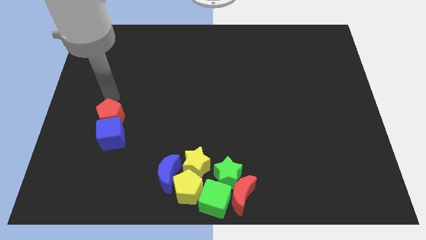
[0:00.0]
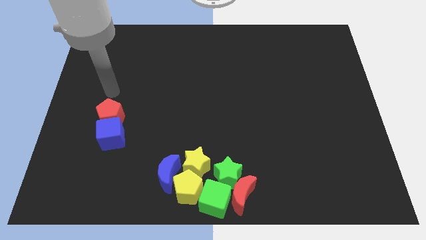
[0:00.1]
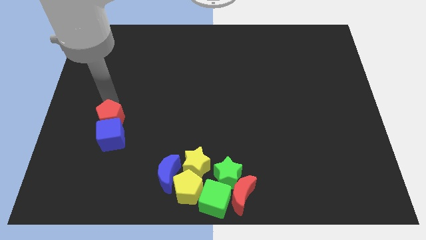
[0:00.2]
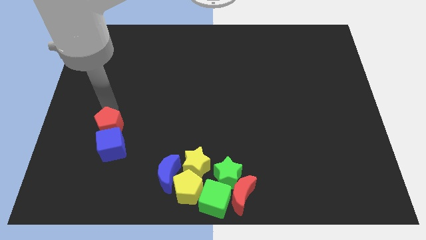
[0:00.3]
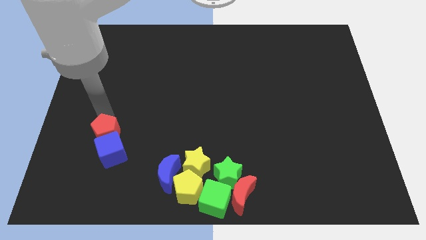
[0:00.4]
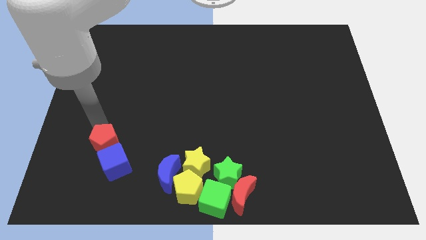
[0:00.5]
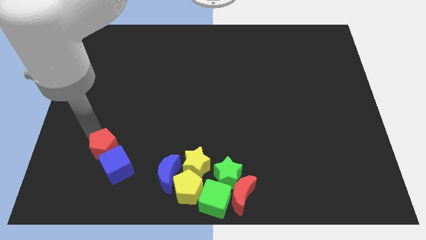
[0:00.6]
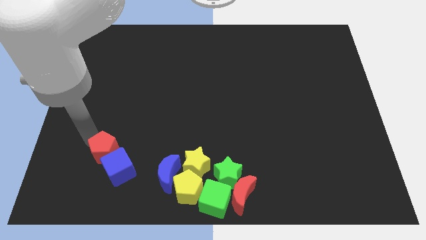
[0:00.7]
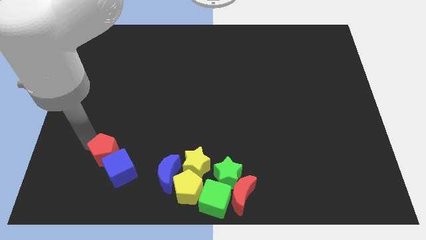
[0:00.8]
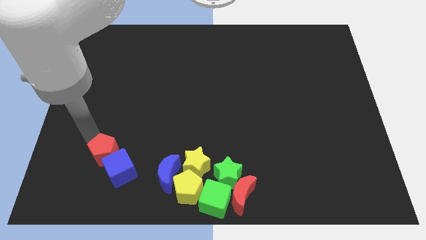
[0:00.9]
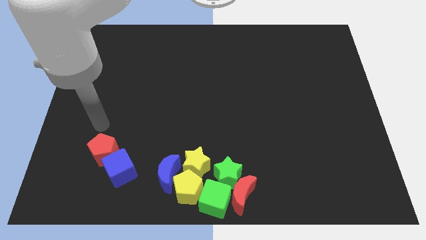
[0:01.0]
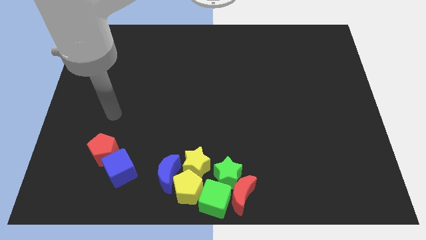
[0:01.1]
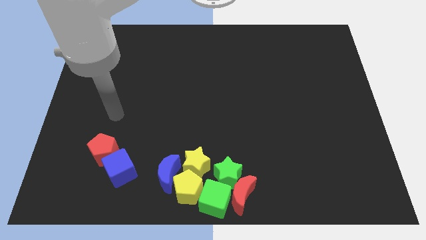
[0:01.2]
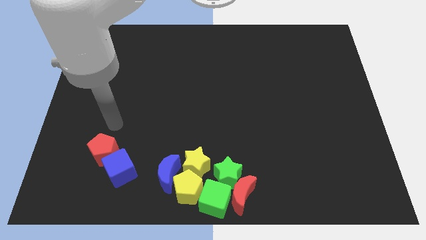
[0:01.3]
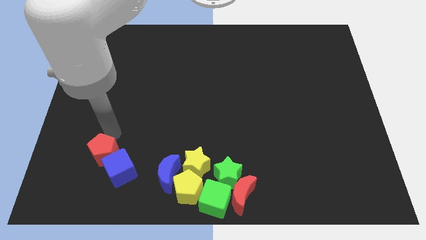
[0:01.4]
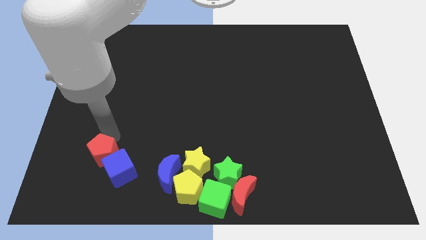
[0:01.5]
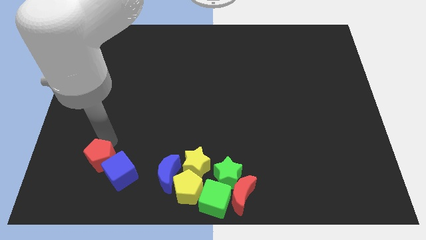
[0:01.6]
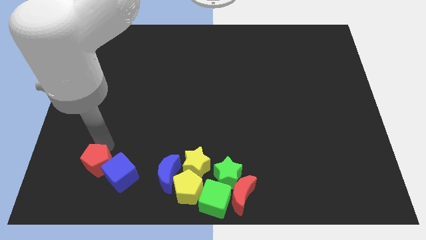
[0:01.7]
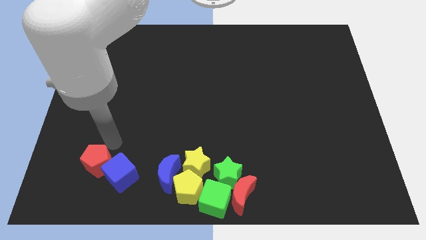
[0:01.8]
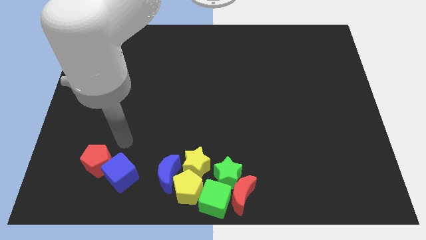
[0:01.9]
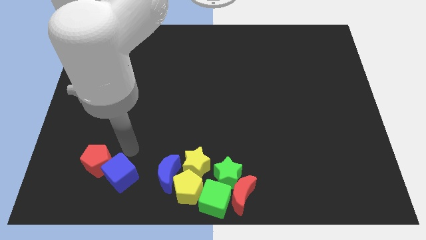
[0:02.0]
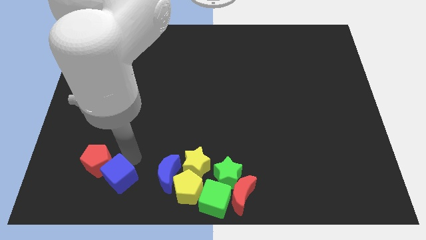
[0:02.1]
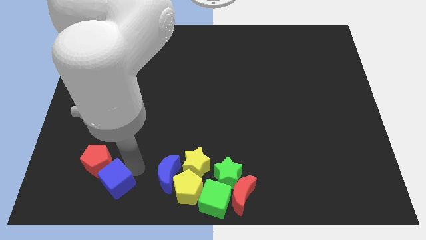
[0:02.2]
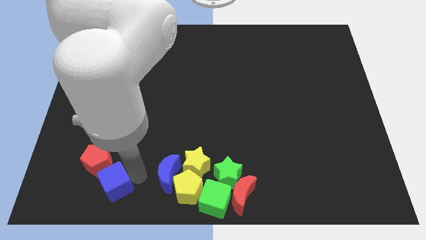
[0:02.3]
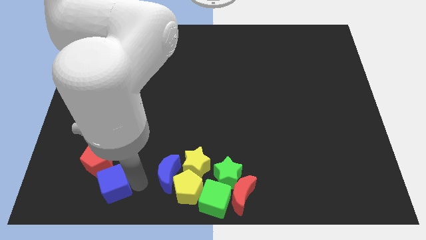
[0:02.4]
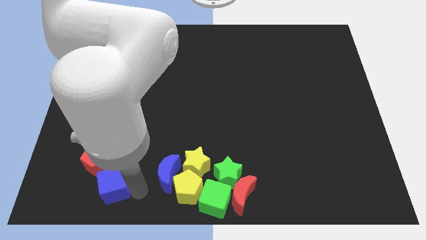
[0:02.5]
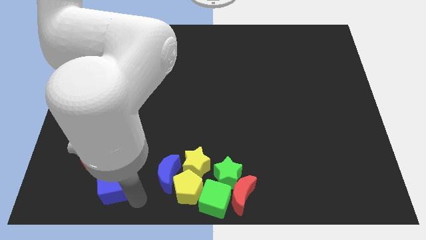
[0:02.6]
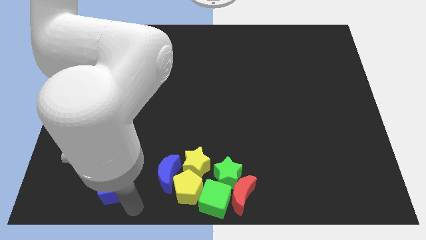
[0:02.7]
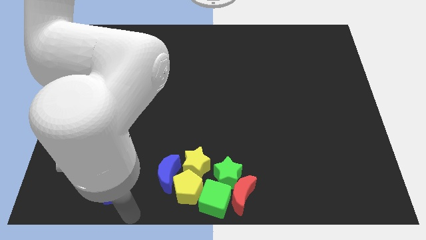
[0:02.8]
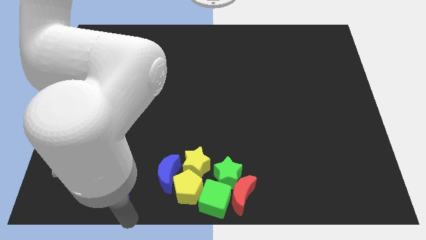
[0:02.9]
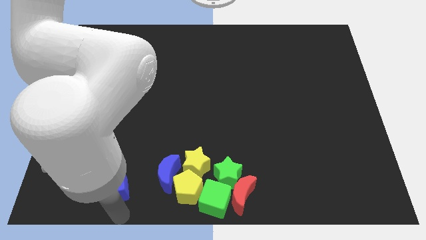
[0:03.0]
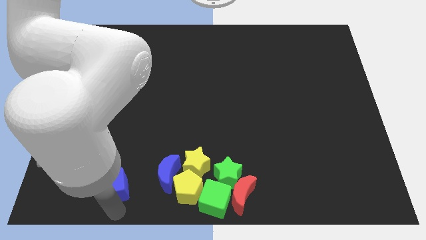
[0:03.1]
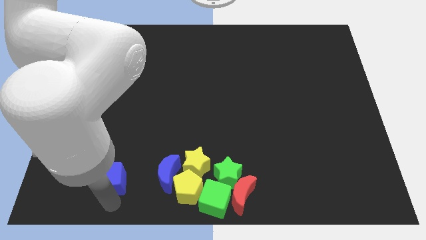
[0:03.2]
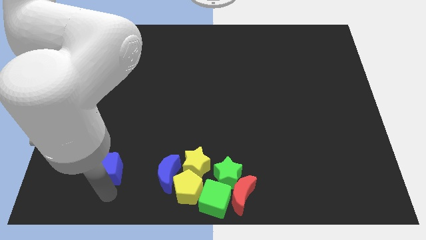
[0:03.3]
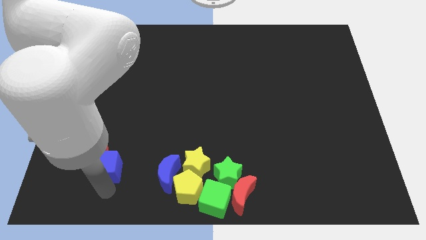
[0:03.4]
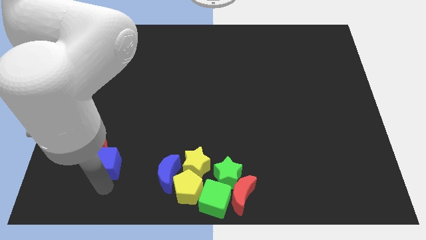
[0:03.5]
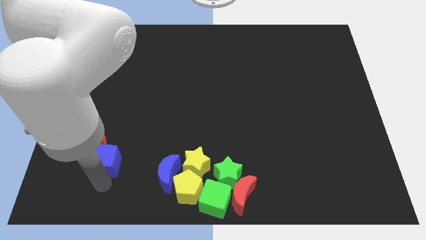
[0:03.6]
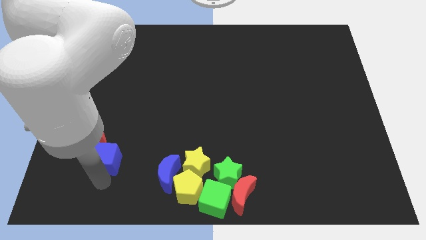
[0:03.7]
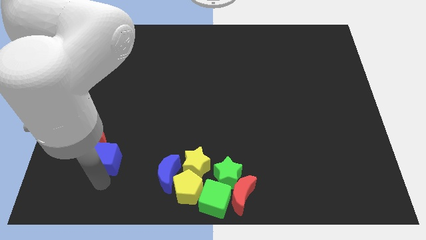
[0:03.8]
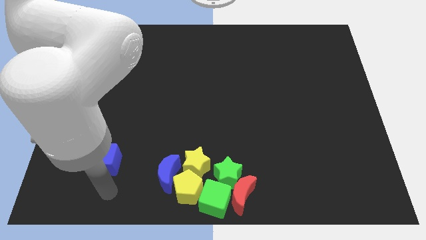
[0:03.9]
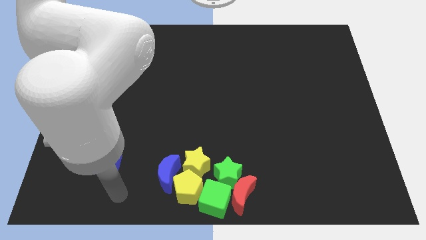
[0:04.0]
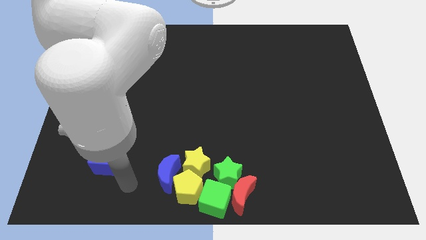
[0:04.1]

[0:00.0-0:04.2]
push both red pentagon and blue cube to bottom left

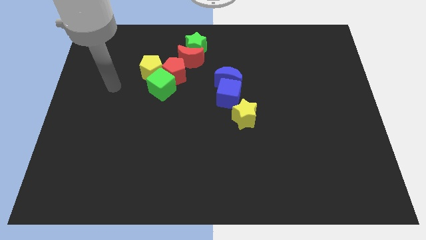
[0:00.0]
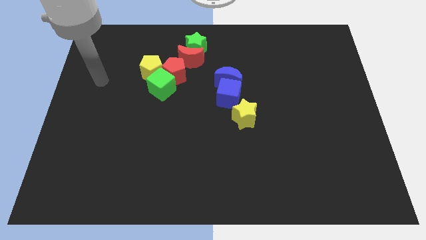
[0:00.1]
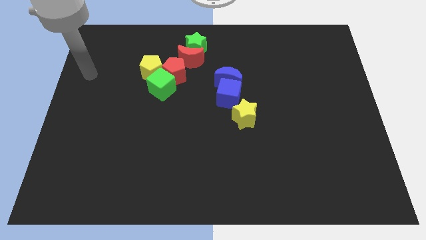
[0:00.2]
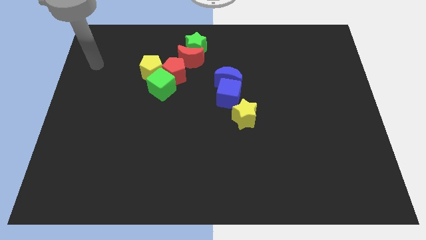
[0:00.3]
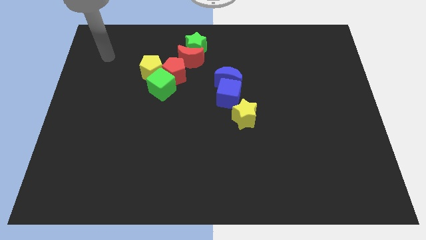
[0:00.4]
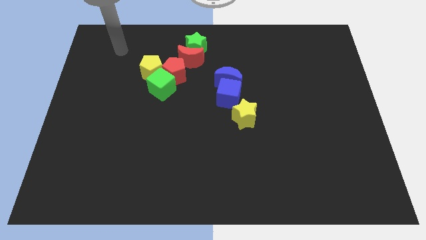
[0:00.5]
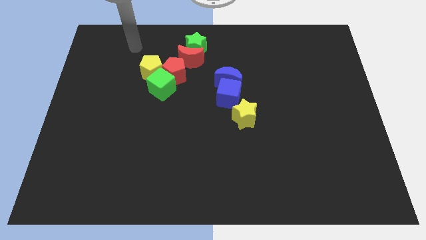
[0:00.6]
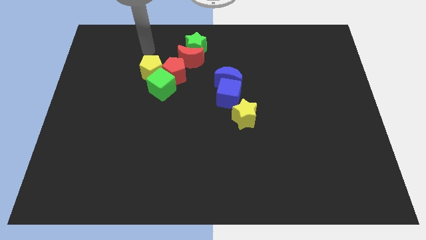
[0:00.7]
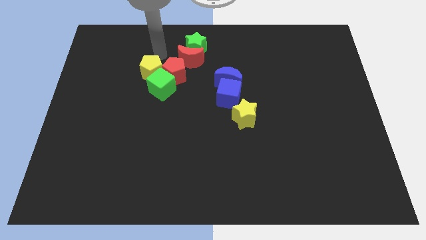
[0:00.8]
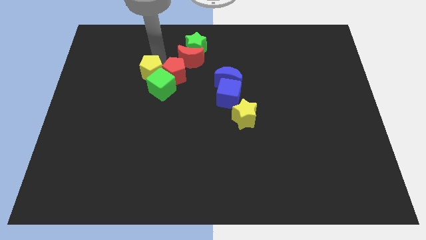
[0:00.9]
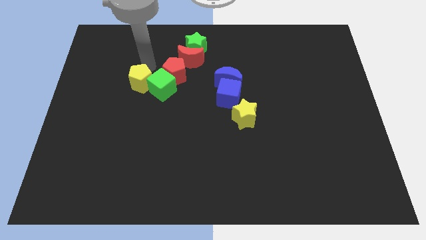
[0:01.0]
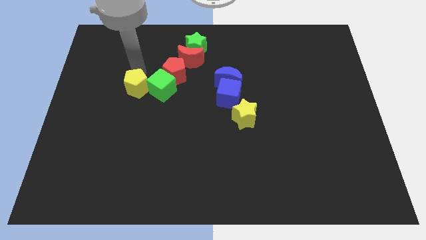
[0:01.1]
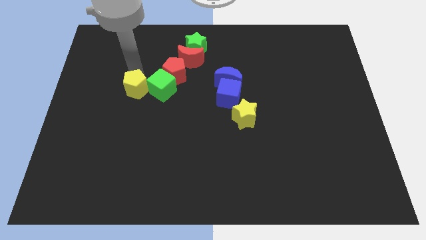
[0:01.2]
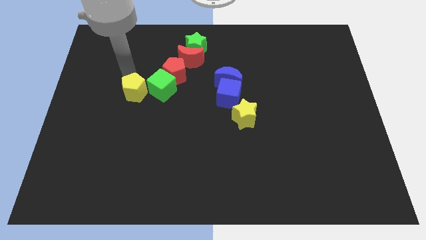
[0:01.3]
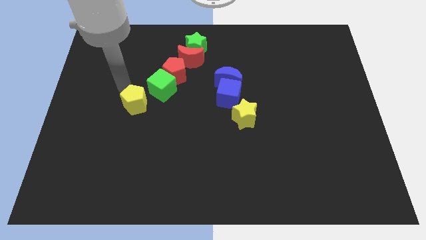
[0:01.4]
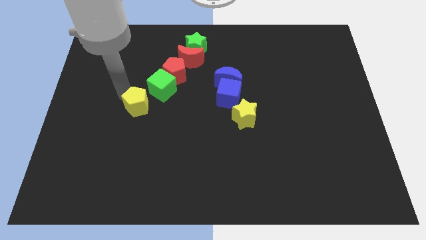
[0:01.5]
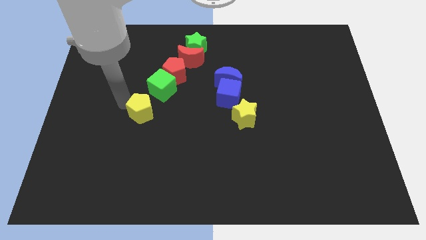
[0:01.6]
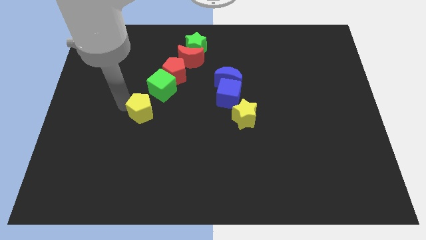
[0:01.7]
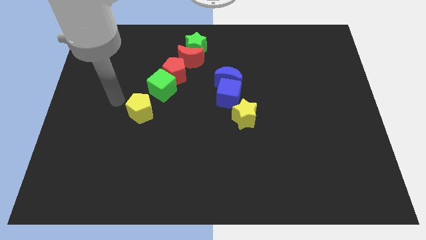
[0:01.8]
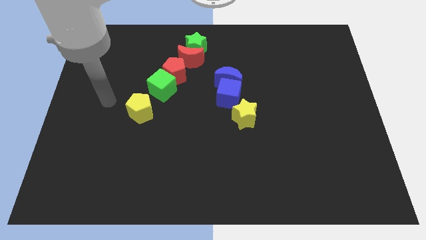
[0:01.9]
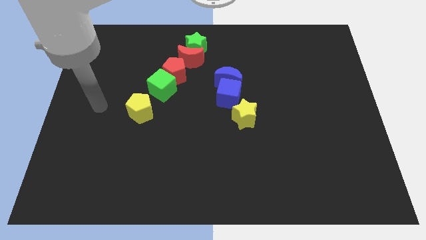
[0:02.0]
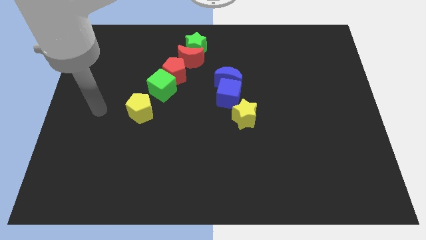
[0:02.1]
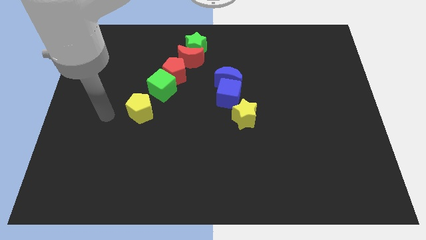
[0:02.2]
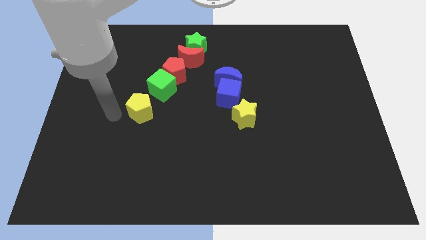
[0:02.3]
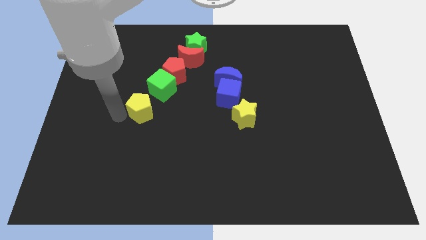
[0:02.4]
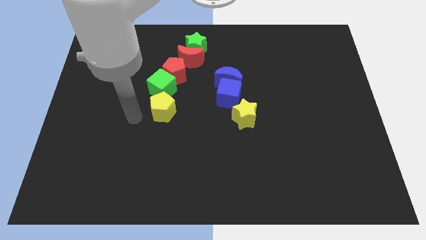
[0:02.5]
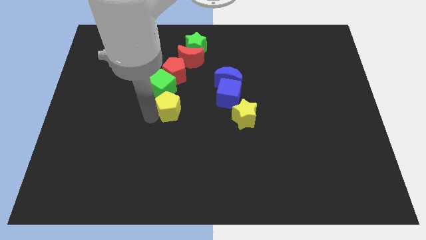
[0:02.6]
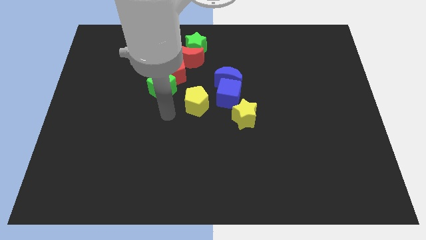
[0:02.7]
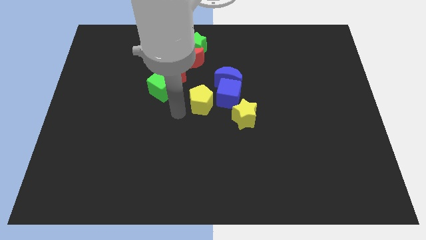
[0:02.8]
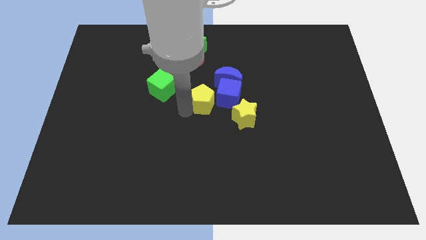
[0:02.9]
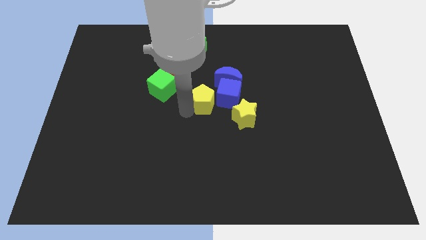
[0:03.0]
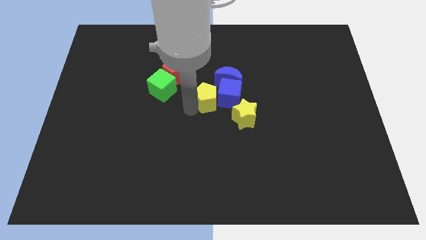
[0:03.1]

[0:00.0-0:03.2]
separate yellow pentagon from green cube

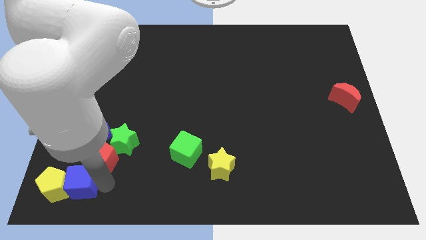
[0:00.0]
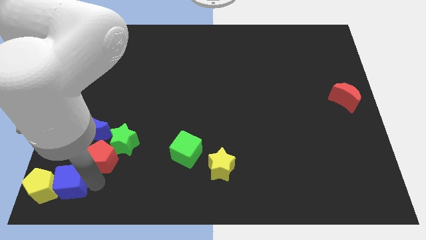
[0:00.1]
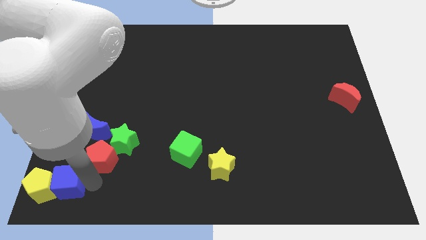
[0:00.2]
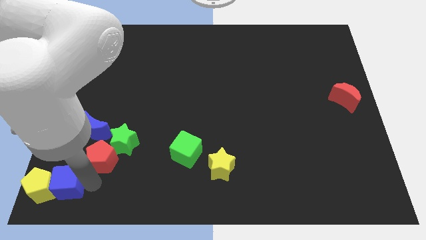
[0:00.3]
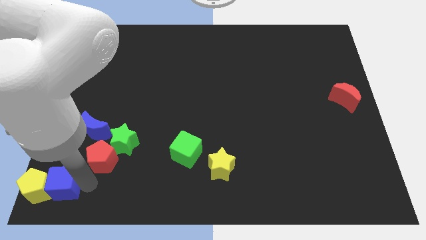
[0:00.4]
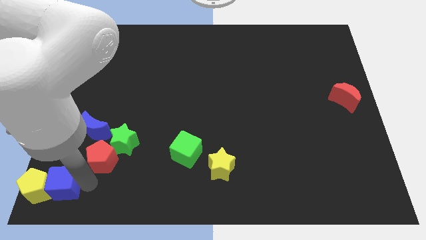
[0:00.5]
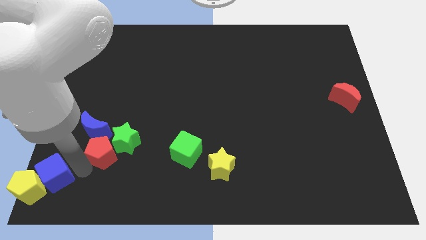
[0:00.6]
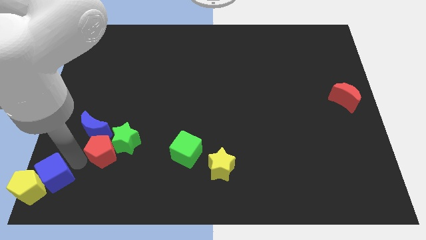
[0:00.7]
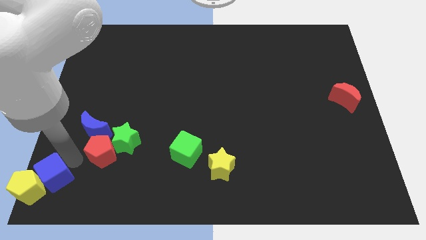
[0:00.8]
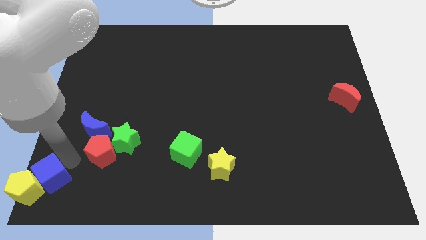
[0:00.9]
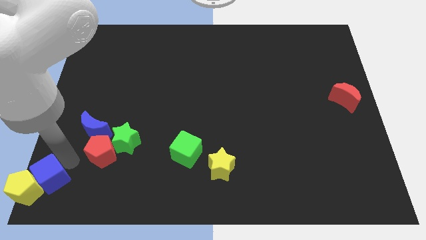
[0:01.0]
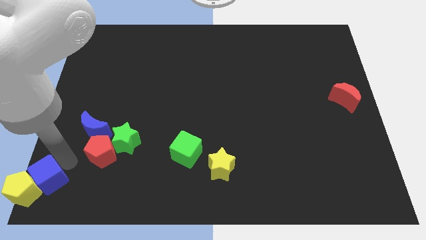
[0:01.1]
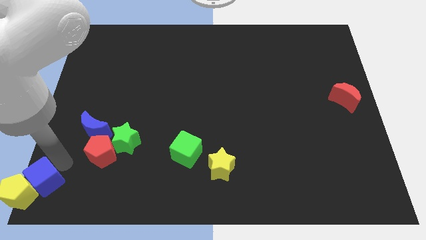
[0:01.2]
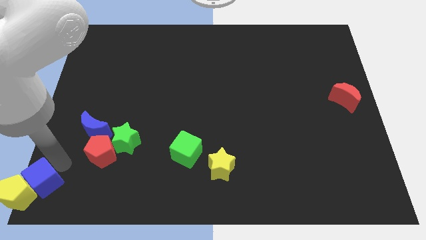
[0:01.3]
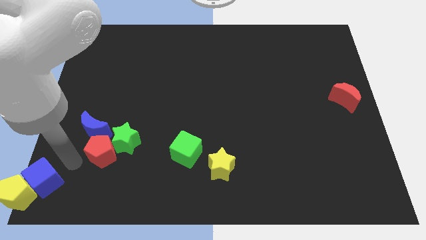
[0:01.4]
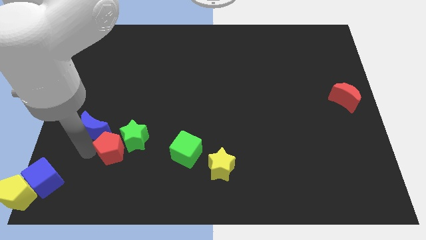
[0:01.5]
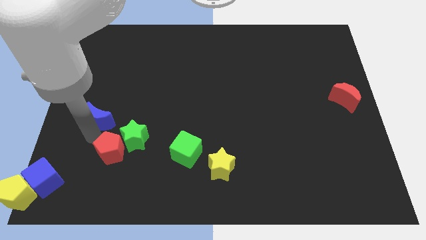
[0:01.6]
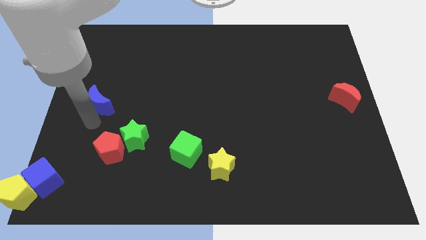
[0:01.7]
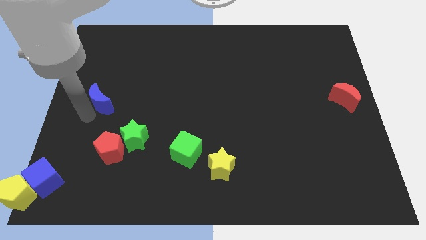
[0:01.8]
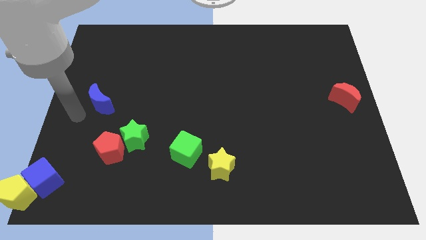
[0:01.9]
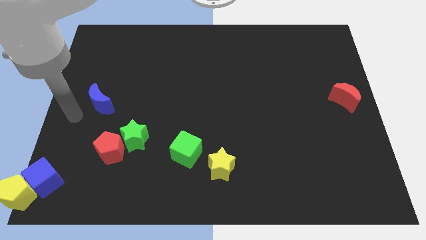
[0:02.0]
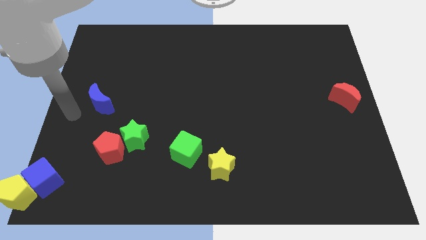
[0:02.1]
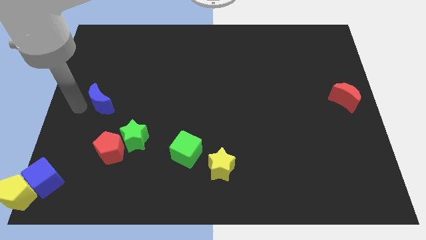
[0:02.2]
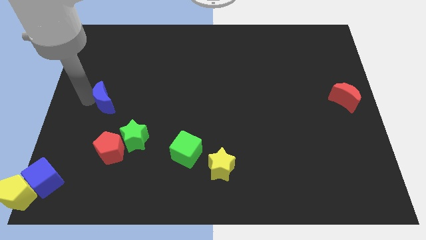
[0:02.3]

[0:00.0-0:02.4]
separate the blue cube and red pentagon
